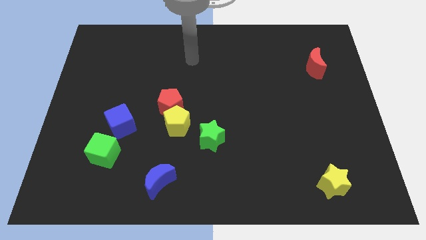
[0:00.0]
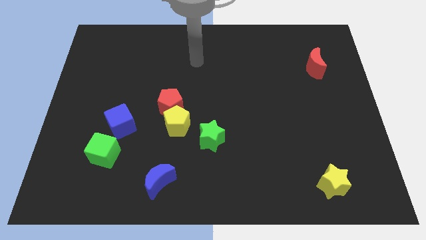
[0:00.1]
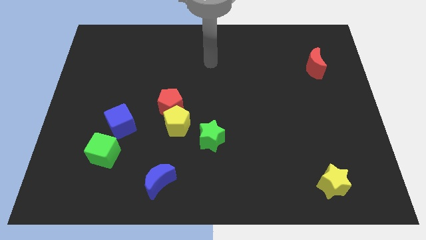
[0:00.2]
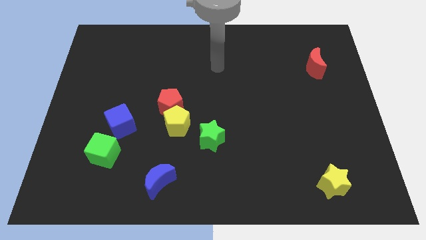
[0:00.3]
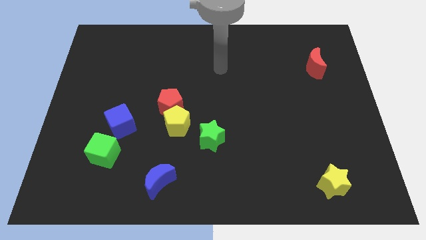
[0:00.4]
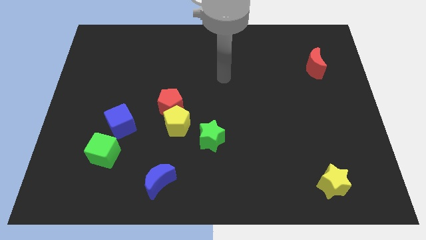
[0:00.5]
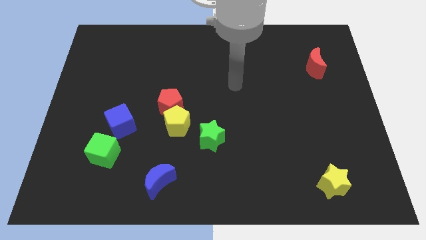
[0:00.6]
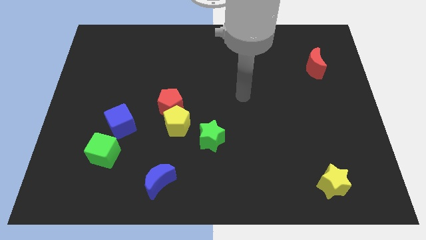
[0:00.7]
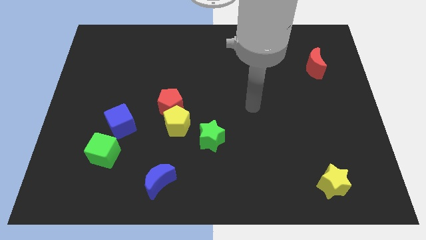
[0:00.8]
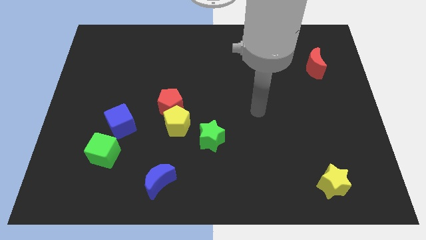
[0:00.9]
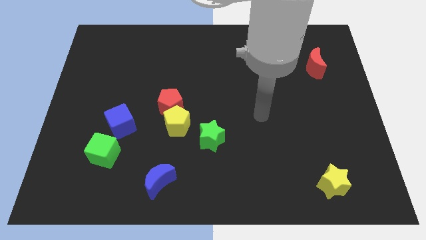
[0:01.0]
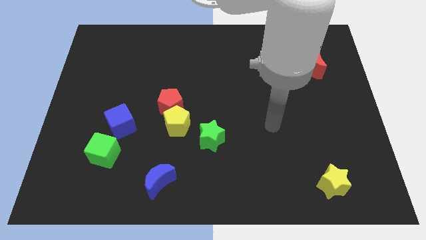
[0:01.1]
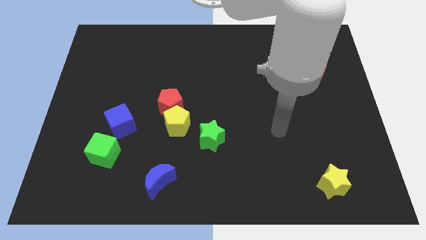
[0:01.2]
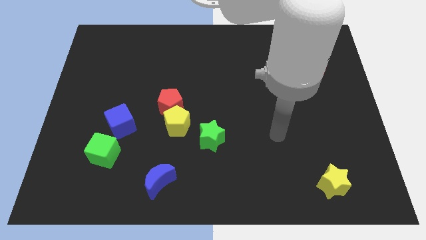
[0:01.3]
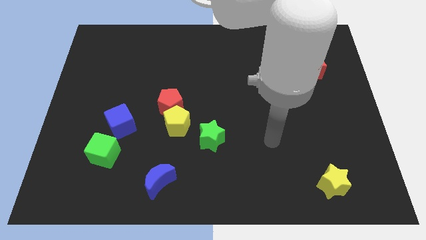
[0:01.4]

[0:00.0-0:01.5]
point the arm to the right of the green star

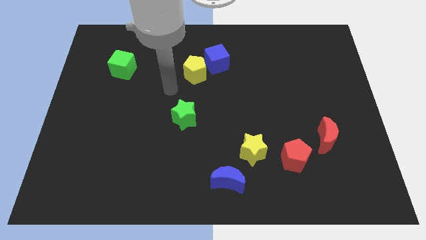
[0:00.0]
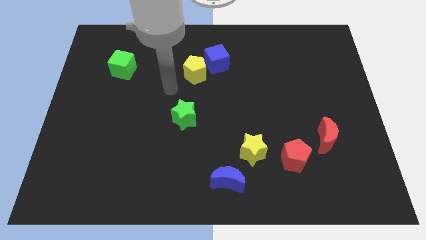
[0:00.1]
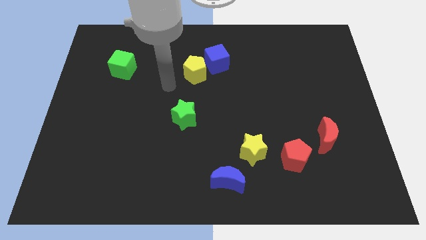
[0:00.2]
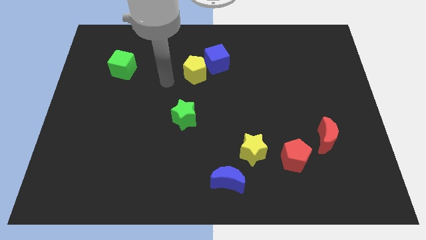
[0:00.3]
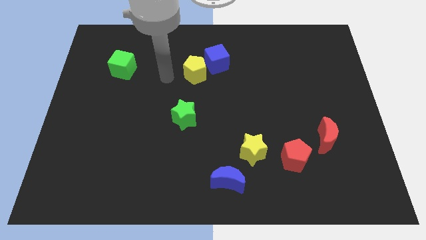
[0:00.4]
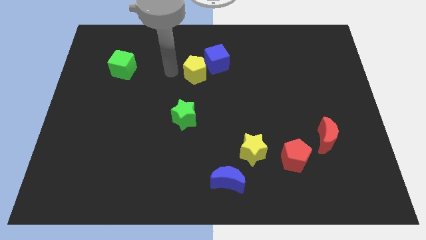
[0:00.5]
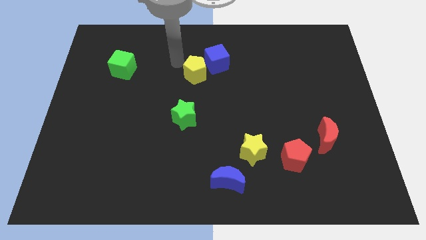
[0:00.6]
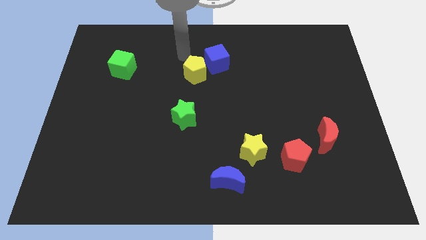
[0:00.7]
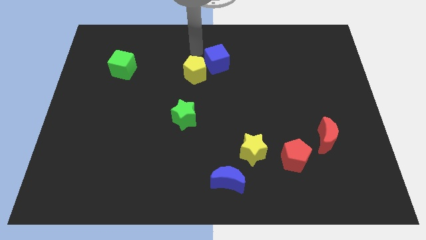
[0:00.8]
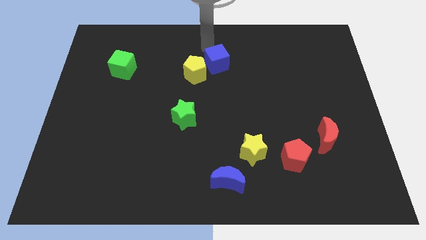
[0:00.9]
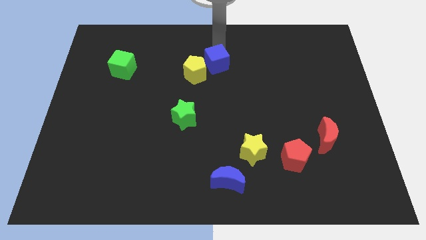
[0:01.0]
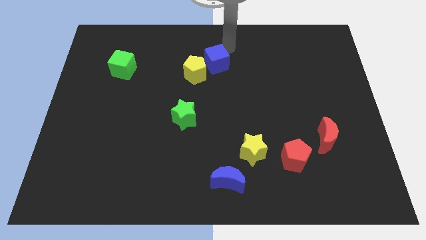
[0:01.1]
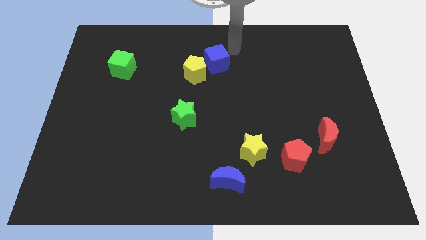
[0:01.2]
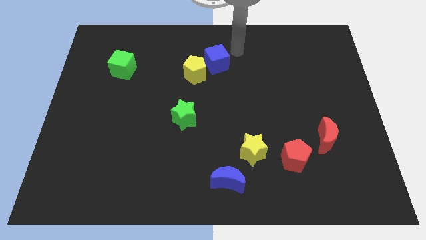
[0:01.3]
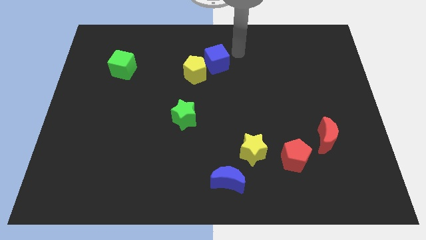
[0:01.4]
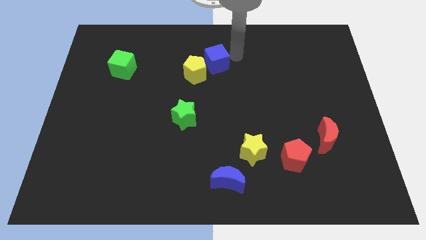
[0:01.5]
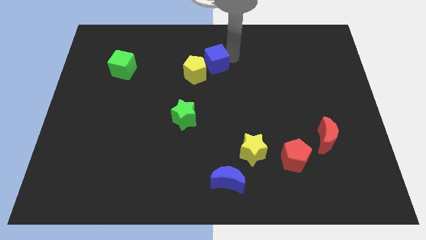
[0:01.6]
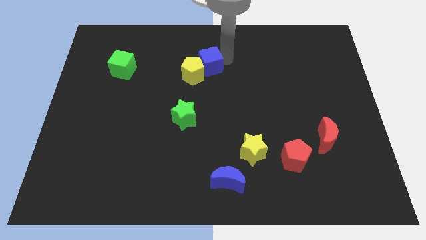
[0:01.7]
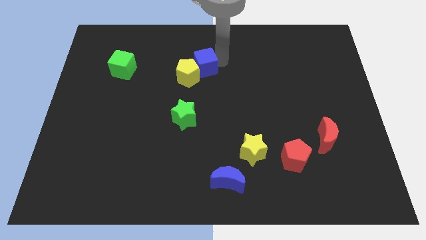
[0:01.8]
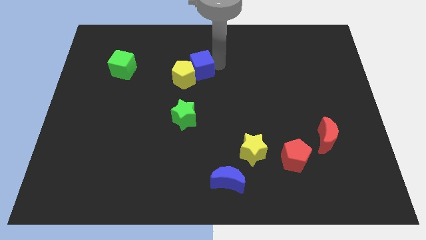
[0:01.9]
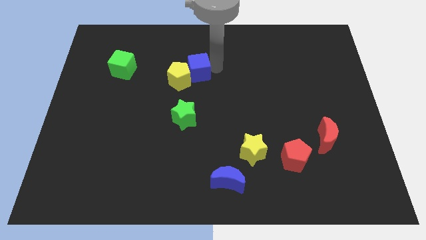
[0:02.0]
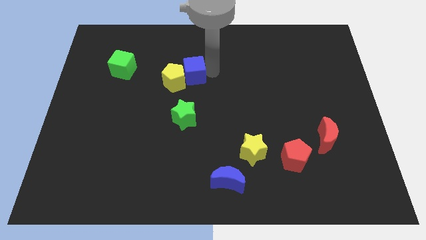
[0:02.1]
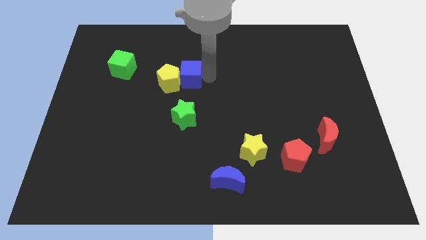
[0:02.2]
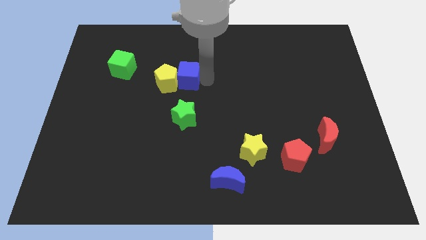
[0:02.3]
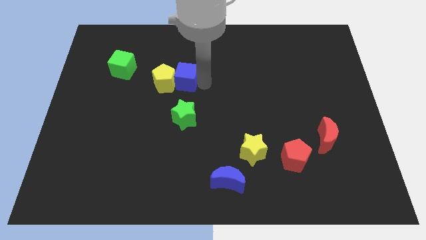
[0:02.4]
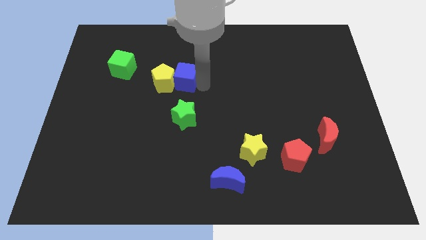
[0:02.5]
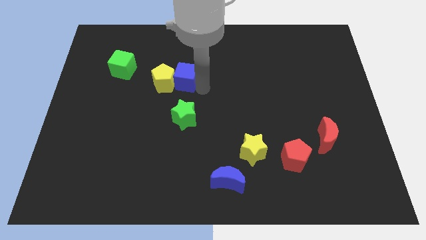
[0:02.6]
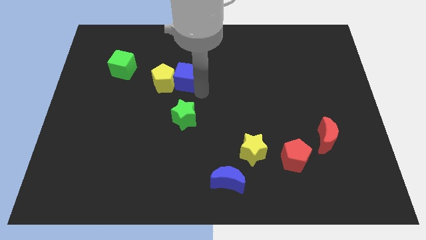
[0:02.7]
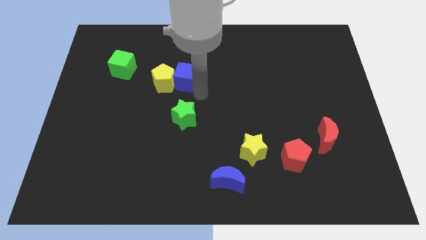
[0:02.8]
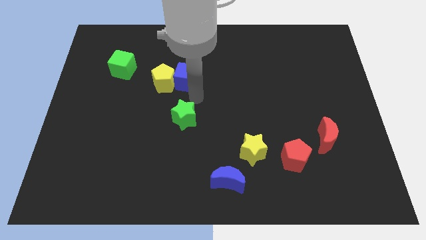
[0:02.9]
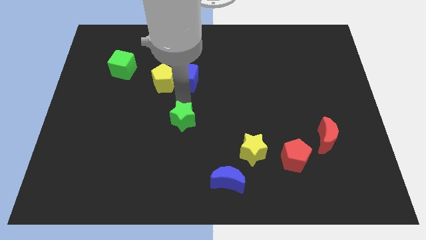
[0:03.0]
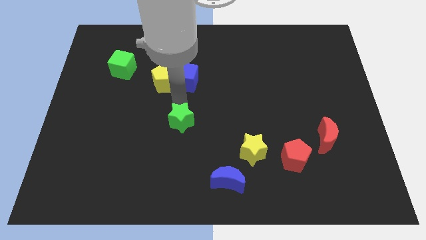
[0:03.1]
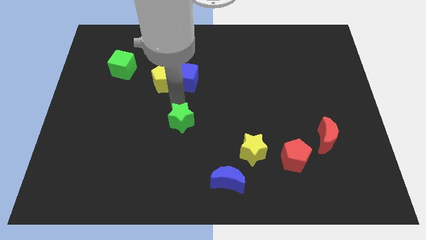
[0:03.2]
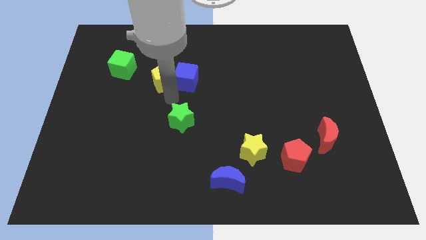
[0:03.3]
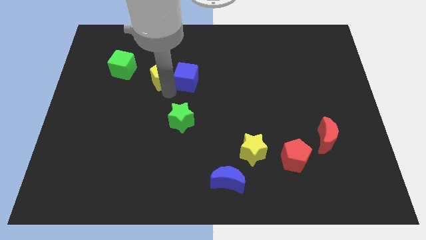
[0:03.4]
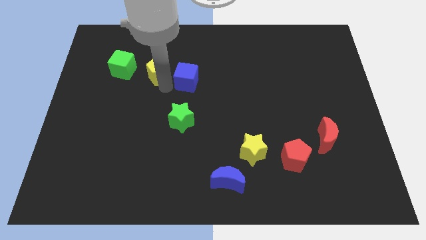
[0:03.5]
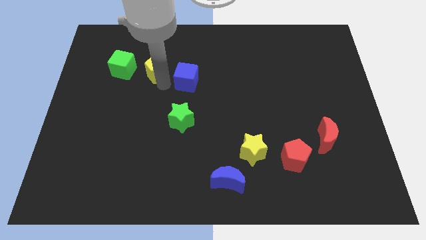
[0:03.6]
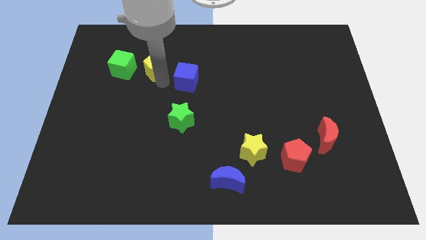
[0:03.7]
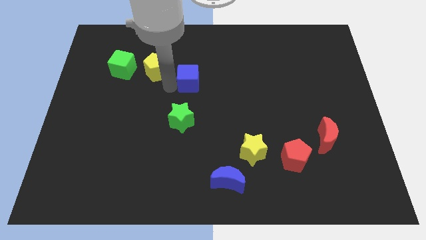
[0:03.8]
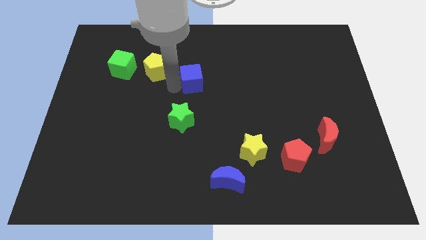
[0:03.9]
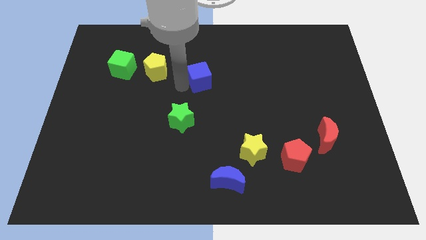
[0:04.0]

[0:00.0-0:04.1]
separate yellow pentagon from the blue cube

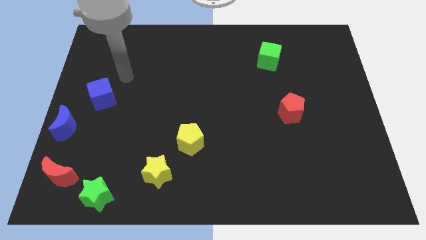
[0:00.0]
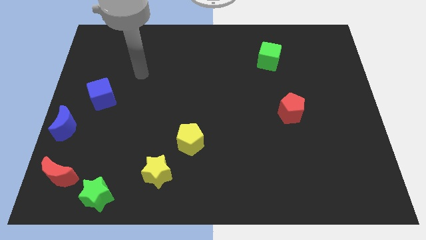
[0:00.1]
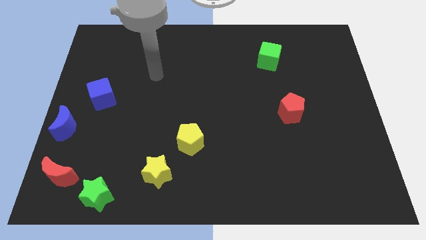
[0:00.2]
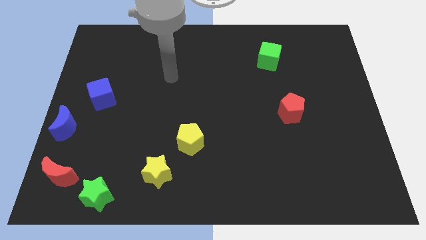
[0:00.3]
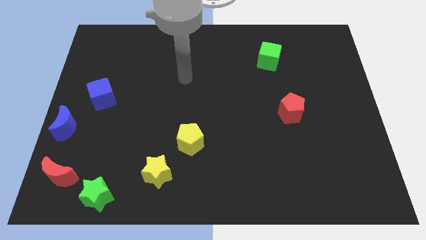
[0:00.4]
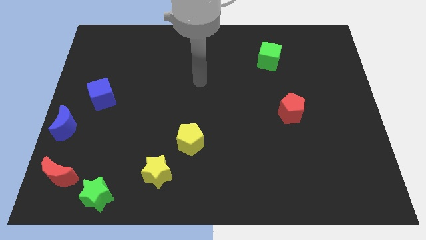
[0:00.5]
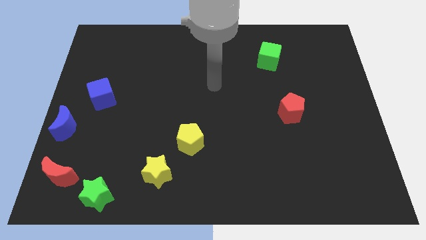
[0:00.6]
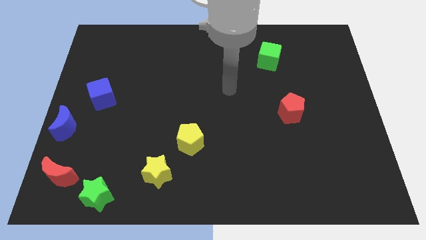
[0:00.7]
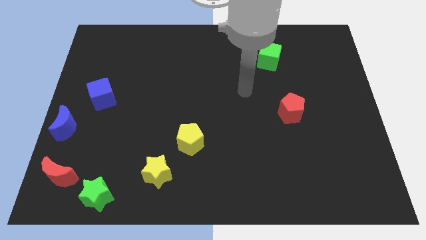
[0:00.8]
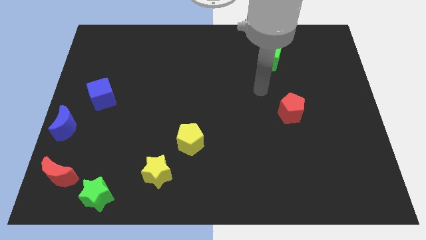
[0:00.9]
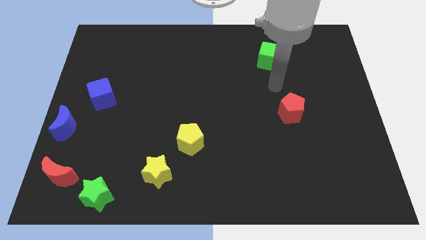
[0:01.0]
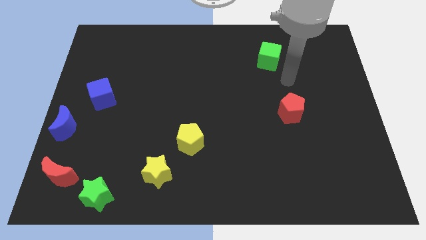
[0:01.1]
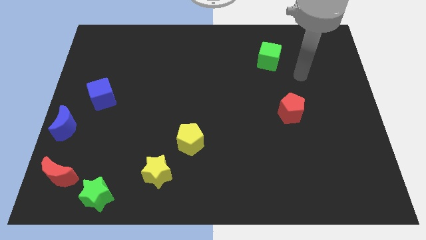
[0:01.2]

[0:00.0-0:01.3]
move your arm away from the blue cube

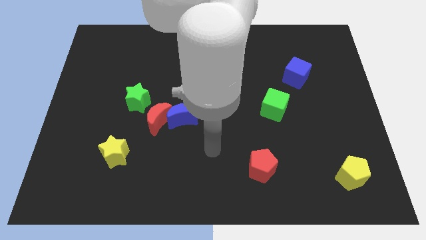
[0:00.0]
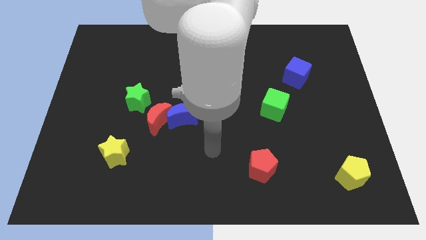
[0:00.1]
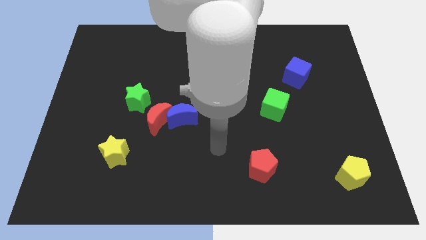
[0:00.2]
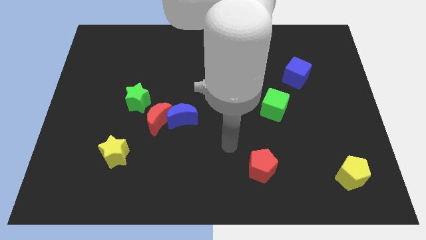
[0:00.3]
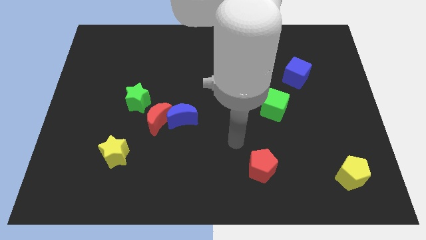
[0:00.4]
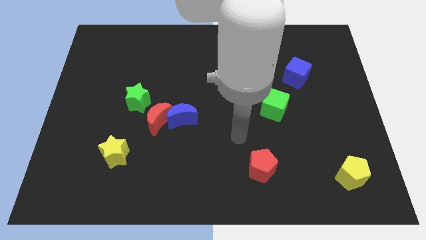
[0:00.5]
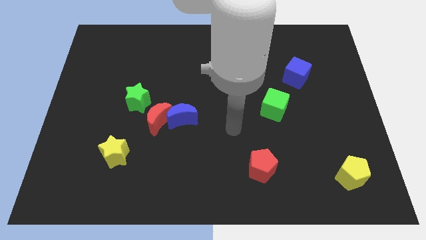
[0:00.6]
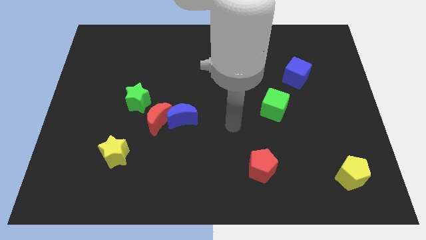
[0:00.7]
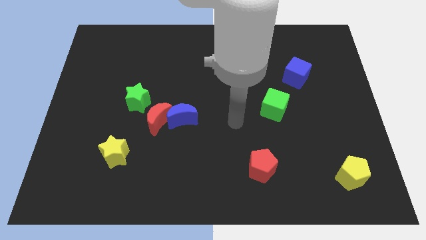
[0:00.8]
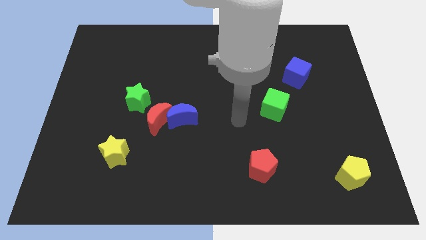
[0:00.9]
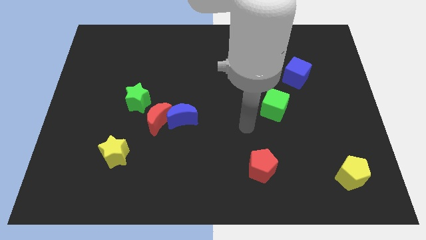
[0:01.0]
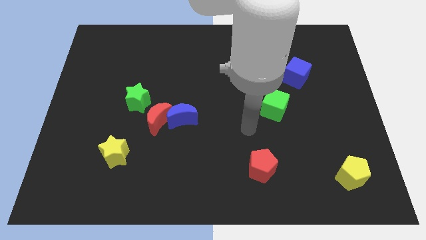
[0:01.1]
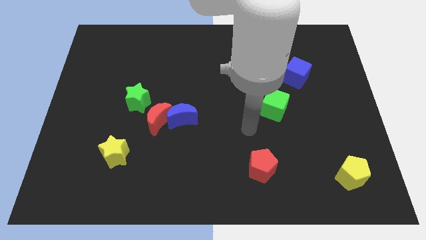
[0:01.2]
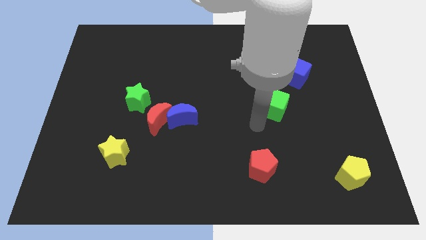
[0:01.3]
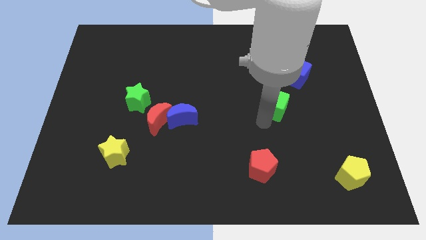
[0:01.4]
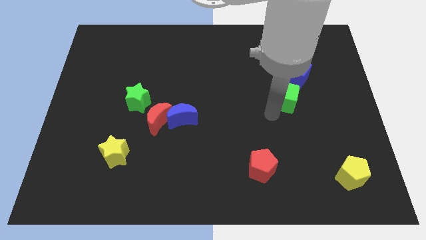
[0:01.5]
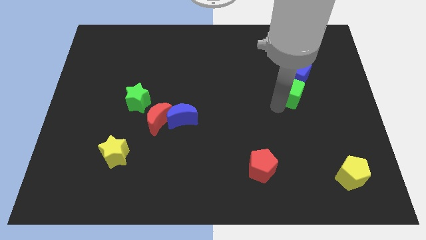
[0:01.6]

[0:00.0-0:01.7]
push the green cube close to the blue cube

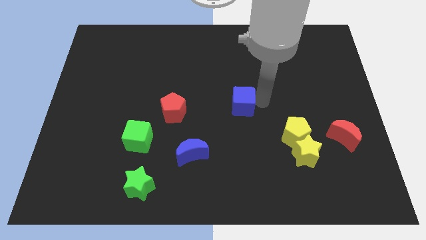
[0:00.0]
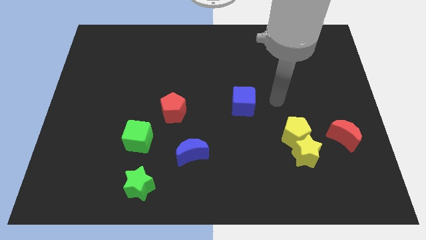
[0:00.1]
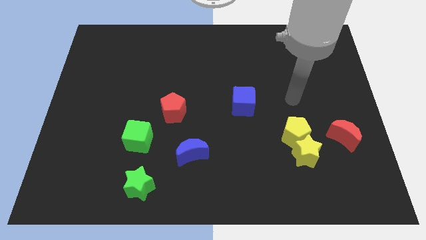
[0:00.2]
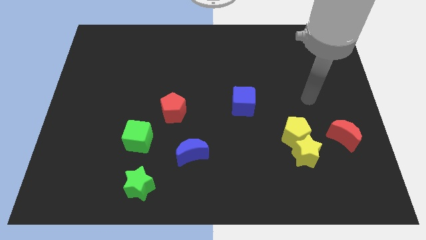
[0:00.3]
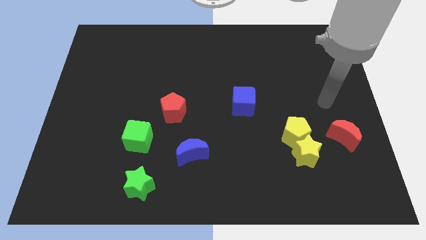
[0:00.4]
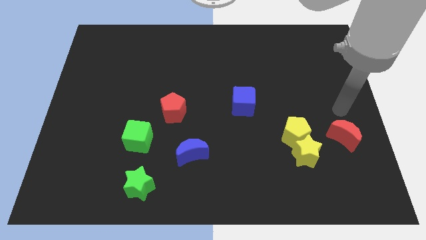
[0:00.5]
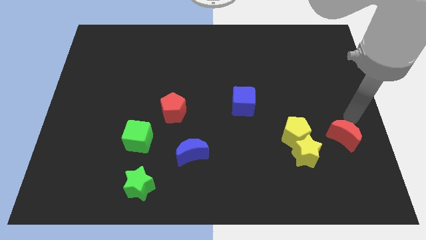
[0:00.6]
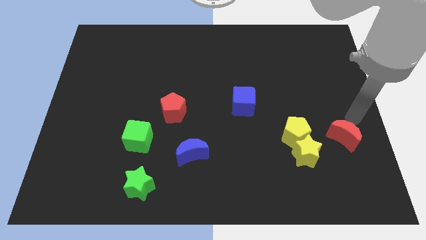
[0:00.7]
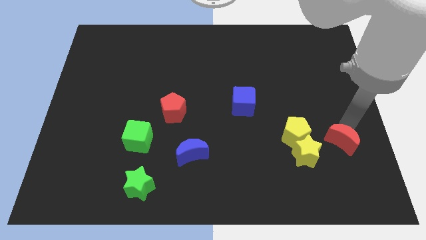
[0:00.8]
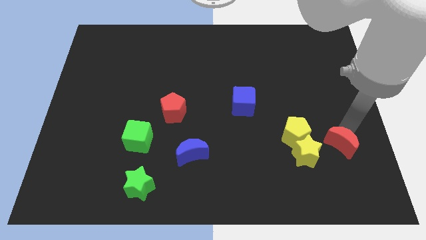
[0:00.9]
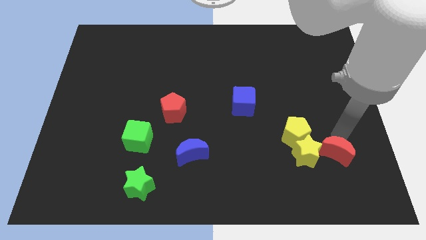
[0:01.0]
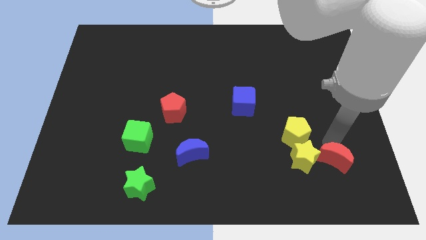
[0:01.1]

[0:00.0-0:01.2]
move the red crescent right side of the yellow star
